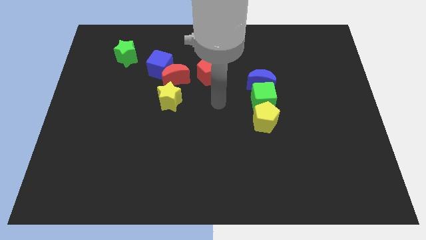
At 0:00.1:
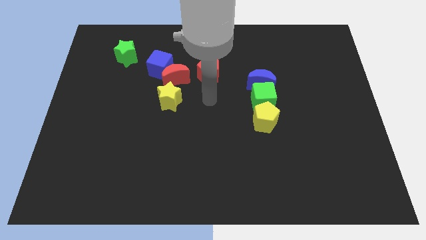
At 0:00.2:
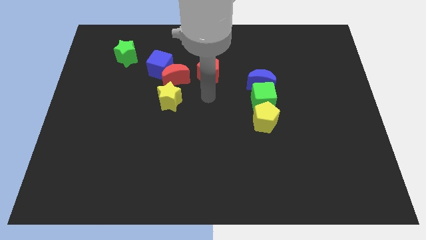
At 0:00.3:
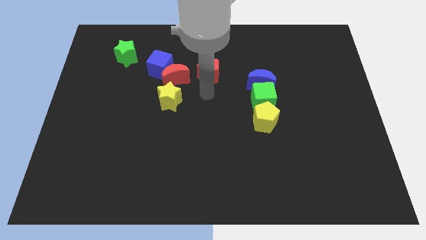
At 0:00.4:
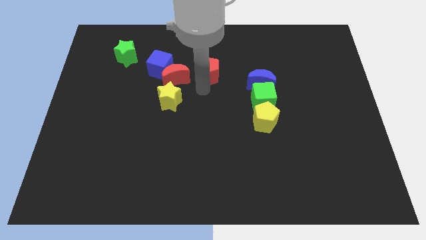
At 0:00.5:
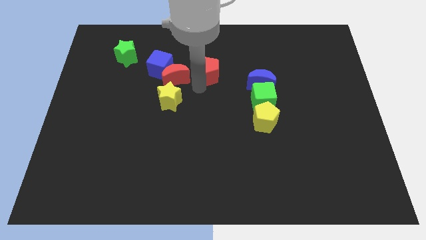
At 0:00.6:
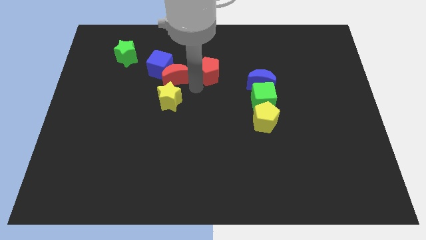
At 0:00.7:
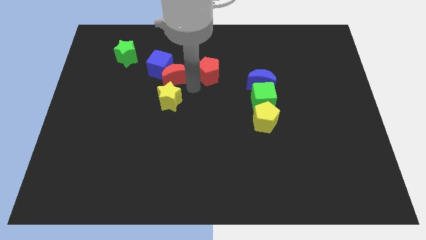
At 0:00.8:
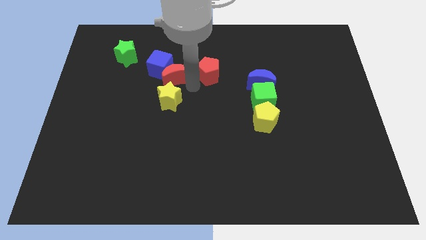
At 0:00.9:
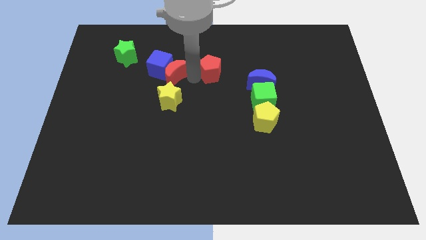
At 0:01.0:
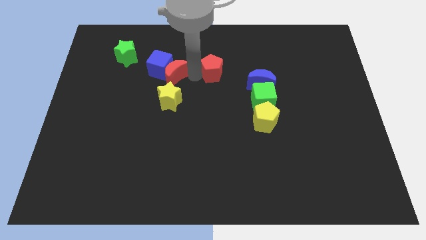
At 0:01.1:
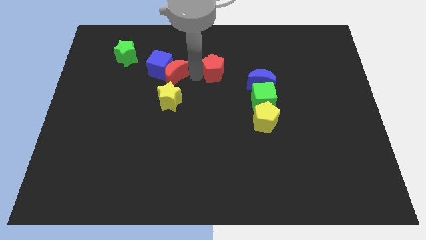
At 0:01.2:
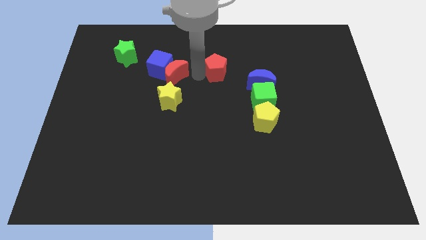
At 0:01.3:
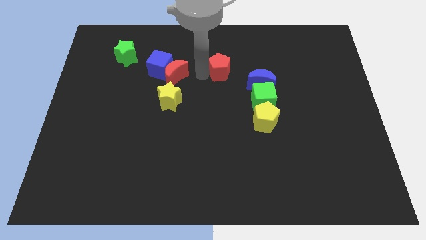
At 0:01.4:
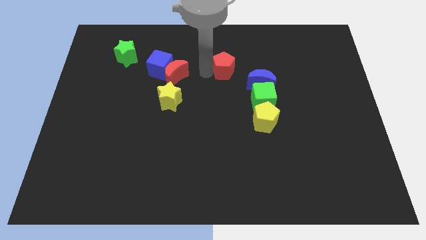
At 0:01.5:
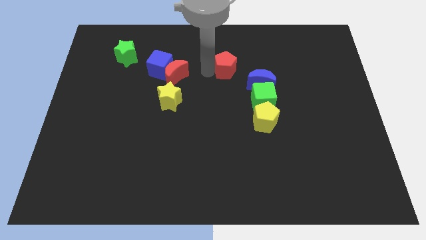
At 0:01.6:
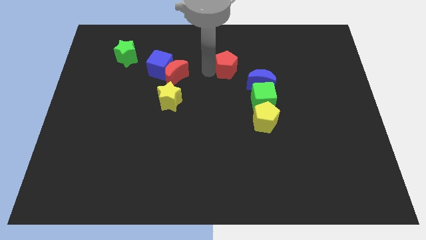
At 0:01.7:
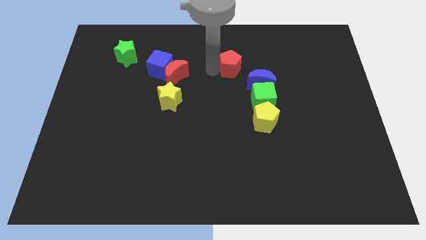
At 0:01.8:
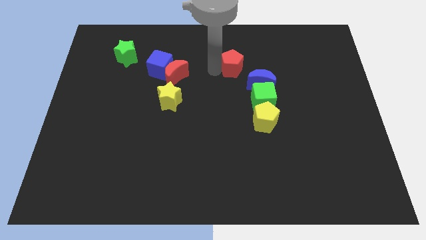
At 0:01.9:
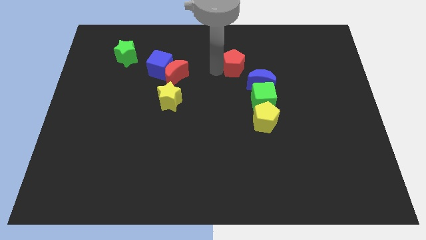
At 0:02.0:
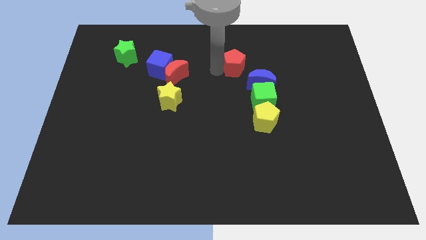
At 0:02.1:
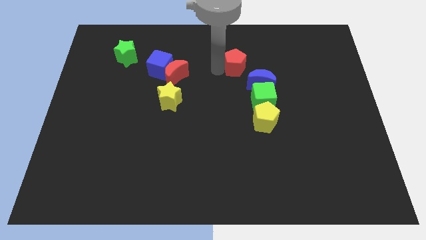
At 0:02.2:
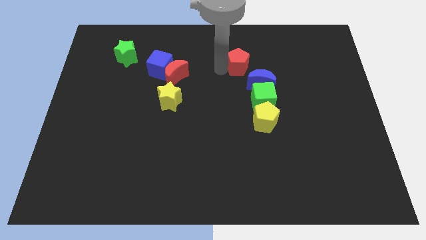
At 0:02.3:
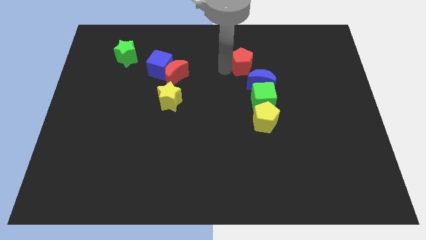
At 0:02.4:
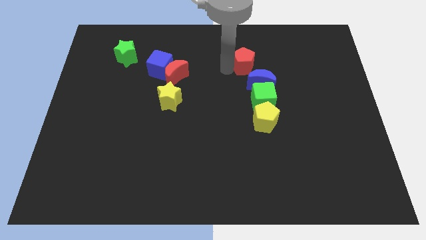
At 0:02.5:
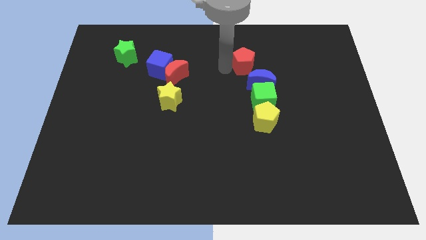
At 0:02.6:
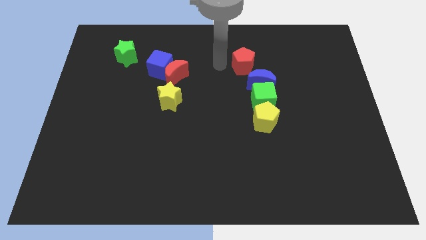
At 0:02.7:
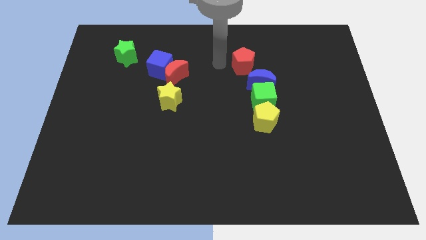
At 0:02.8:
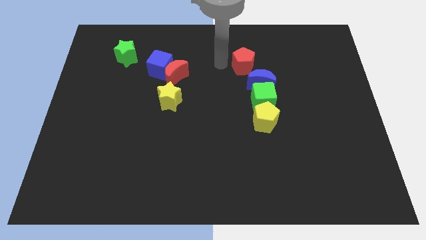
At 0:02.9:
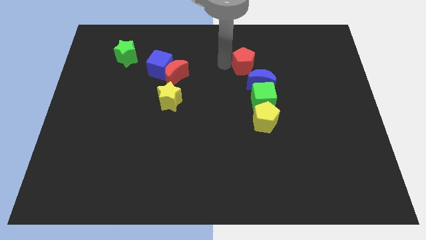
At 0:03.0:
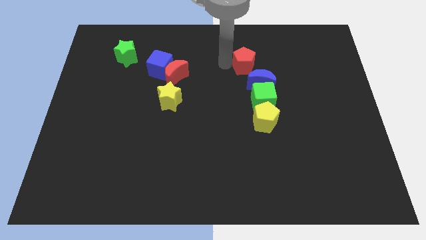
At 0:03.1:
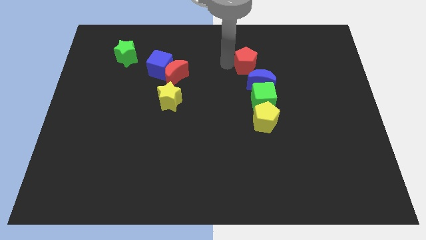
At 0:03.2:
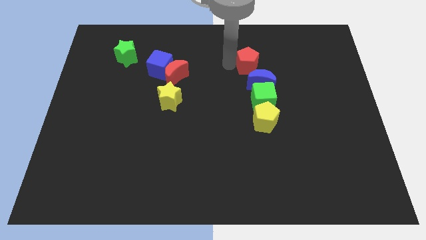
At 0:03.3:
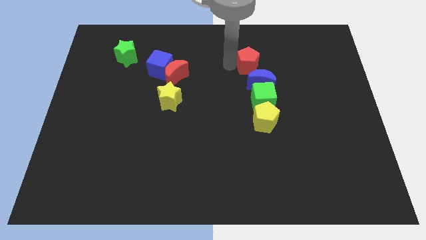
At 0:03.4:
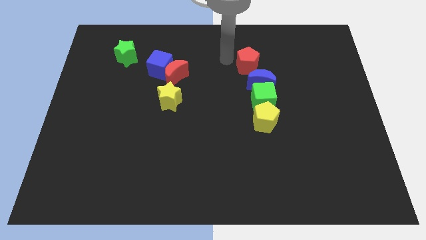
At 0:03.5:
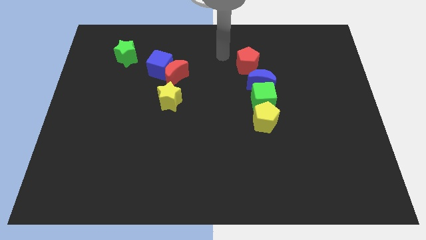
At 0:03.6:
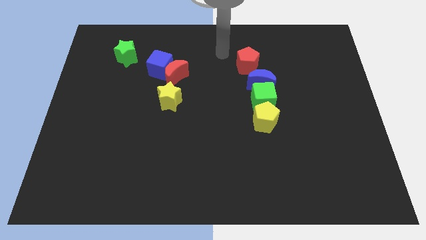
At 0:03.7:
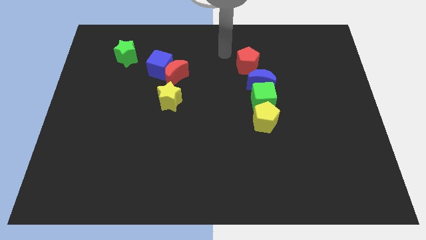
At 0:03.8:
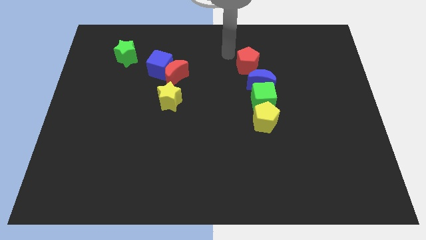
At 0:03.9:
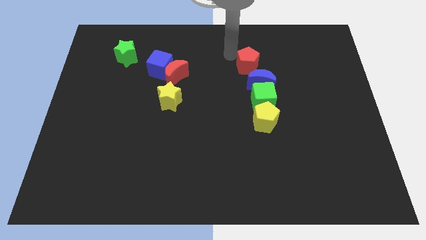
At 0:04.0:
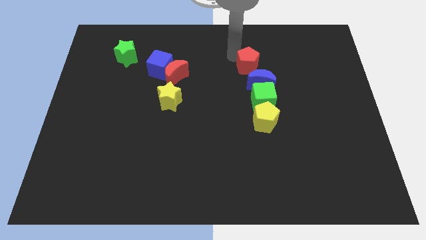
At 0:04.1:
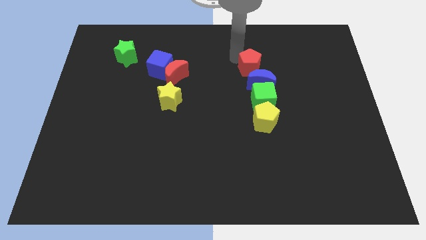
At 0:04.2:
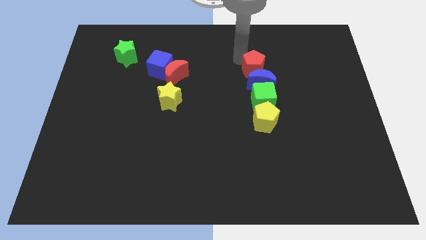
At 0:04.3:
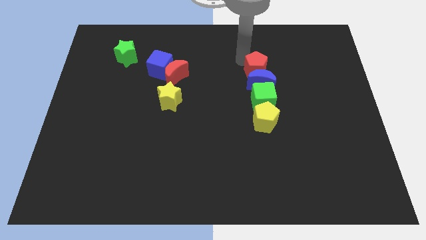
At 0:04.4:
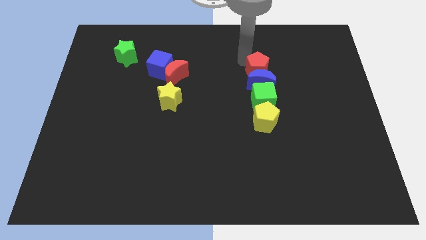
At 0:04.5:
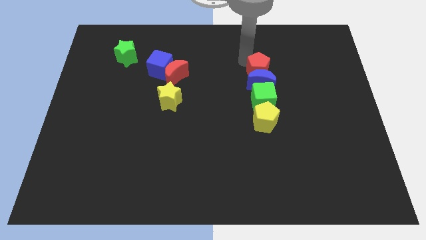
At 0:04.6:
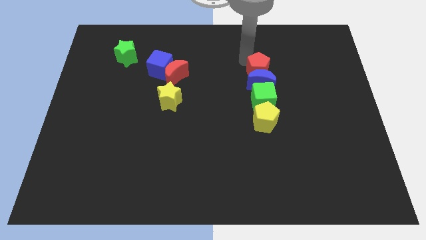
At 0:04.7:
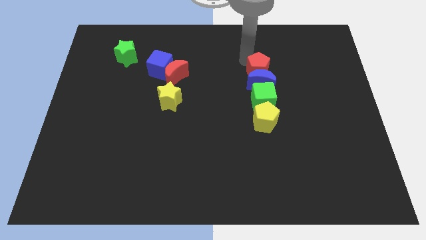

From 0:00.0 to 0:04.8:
move the red pentagon to the top side of the blue moon

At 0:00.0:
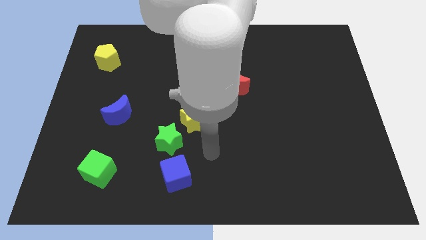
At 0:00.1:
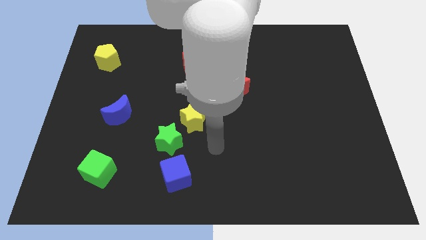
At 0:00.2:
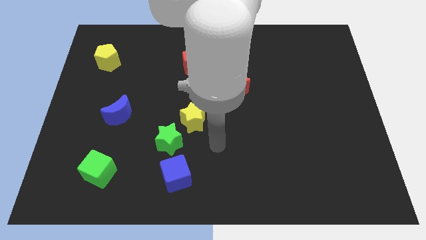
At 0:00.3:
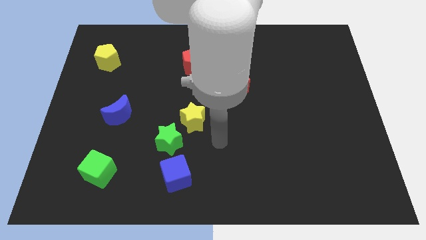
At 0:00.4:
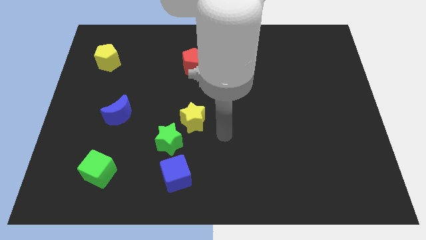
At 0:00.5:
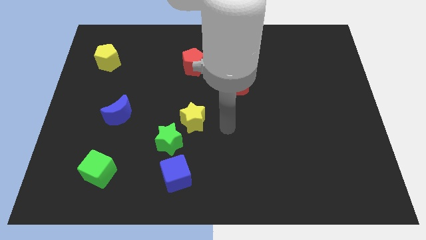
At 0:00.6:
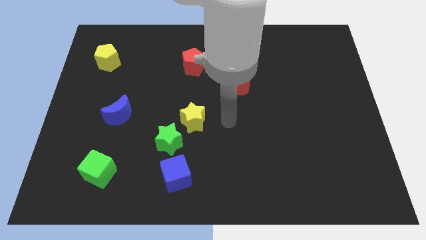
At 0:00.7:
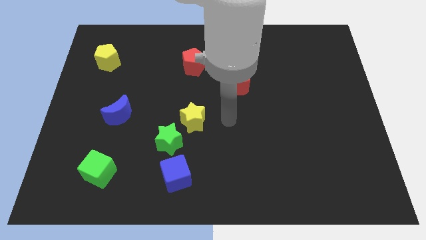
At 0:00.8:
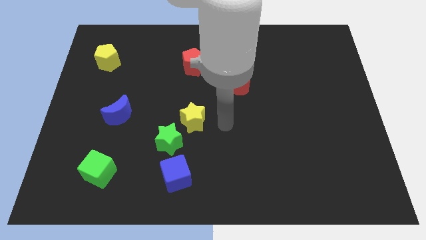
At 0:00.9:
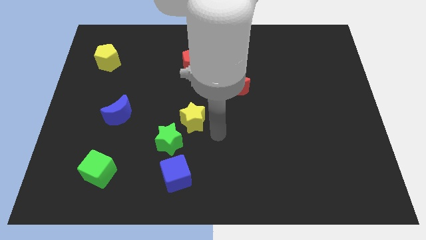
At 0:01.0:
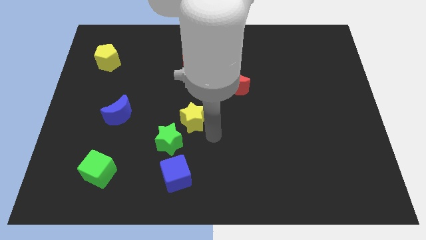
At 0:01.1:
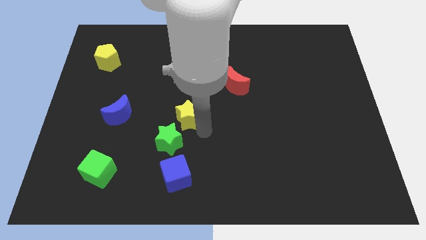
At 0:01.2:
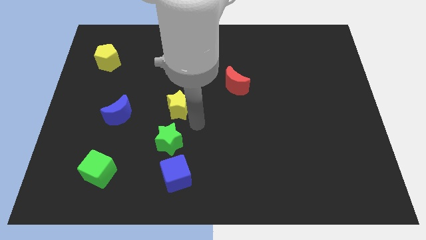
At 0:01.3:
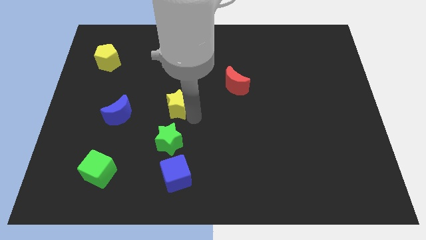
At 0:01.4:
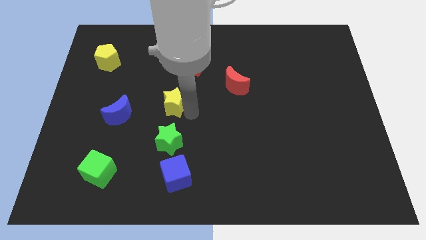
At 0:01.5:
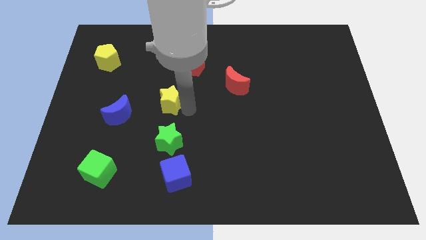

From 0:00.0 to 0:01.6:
put the yellow star vertically to the top of the green star

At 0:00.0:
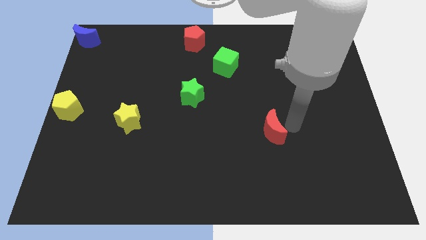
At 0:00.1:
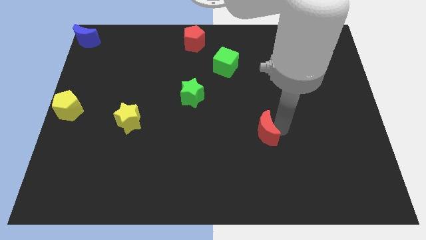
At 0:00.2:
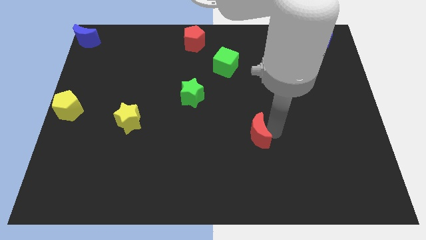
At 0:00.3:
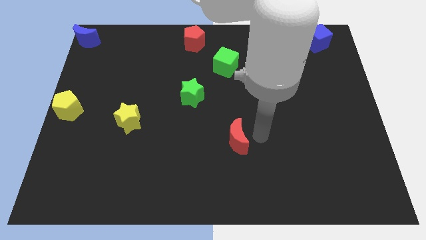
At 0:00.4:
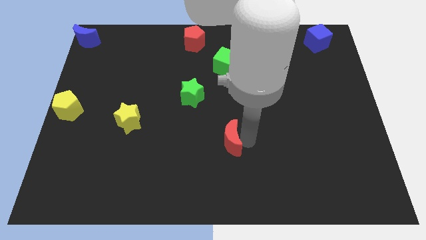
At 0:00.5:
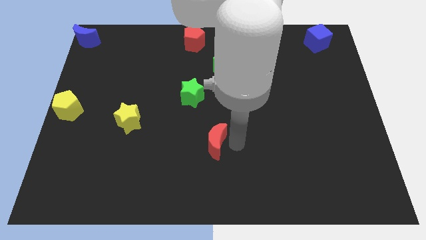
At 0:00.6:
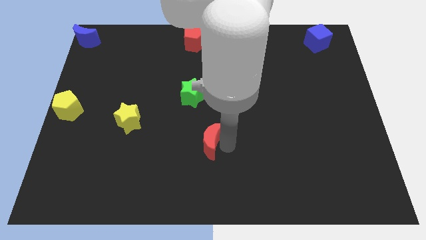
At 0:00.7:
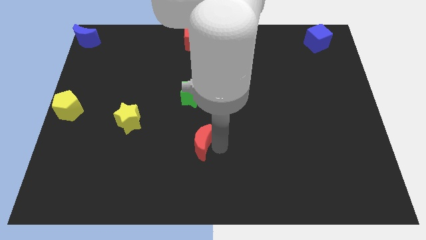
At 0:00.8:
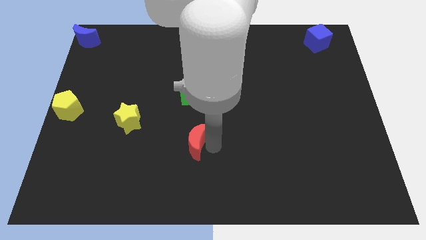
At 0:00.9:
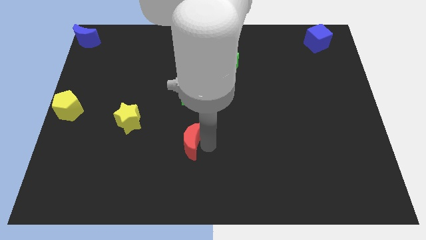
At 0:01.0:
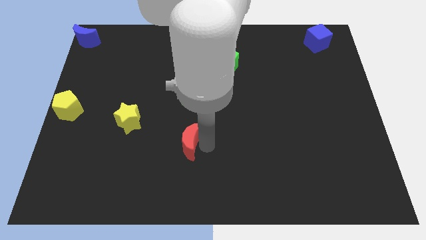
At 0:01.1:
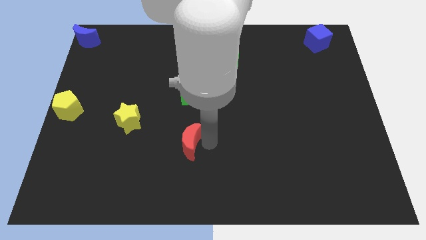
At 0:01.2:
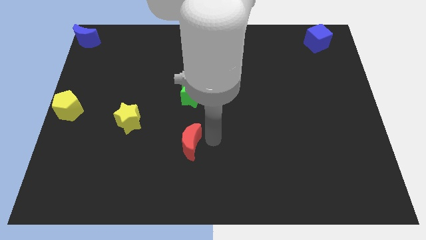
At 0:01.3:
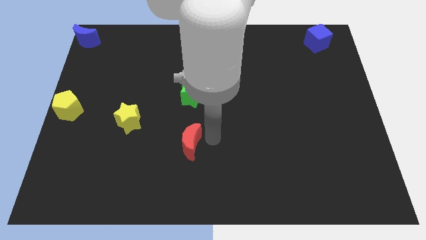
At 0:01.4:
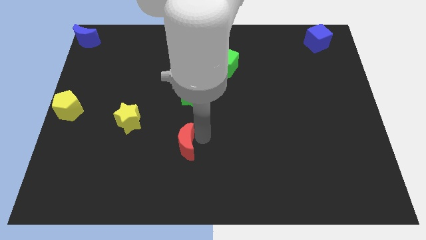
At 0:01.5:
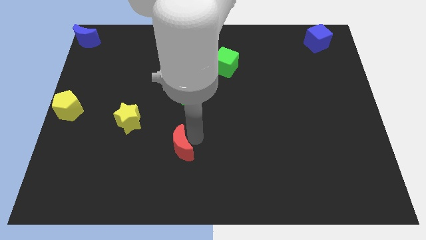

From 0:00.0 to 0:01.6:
push the red crescent towards the bottom side of the green star

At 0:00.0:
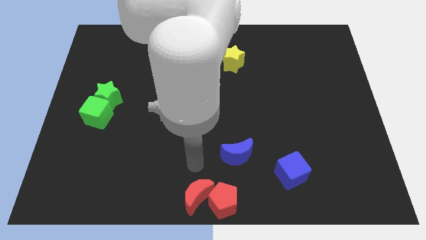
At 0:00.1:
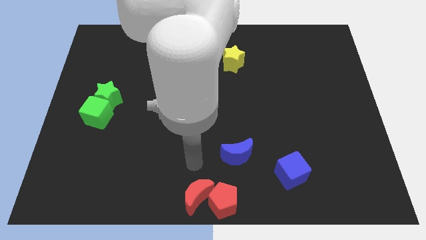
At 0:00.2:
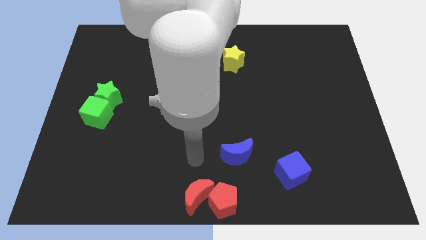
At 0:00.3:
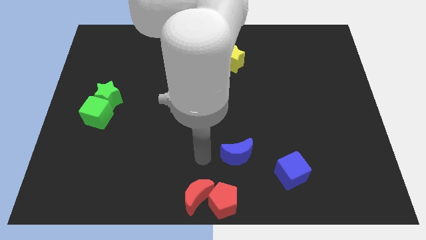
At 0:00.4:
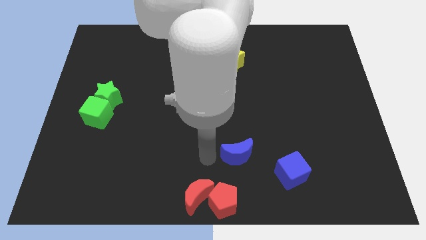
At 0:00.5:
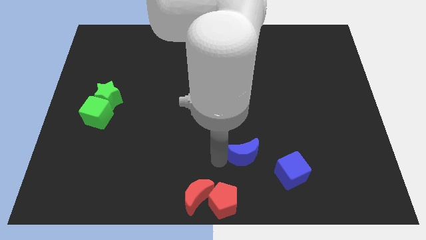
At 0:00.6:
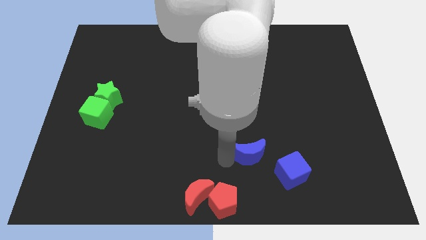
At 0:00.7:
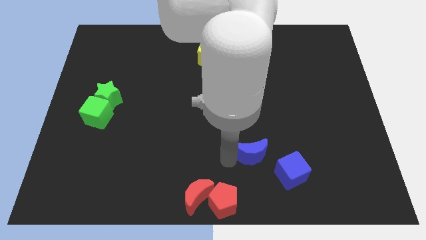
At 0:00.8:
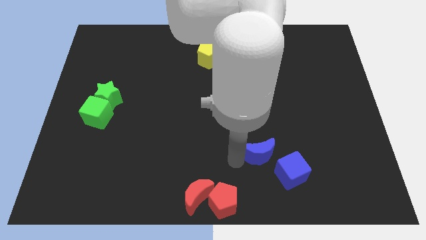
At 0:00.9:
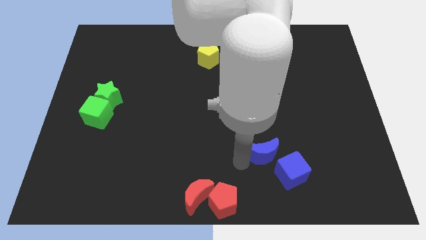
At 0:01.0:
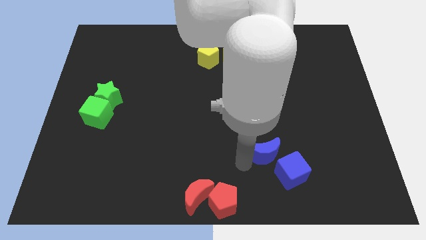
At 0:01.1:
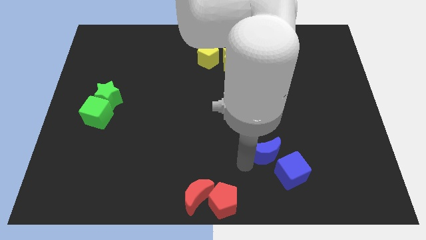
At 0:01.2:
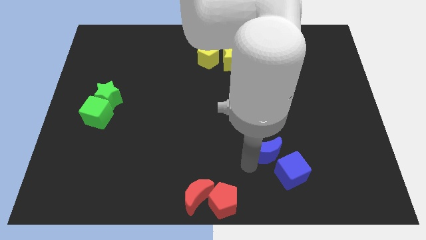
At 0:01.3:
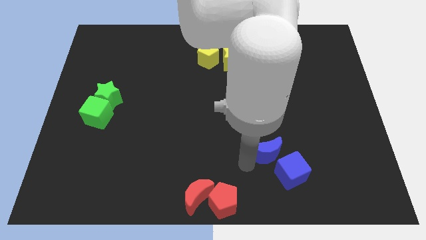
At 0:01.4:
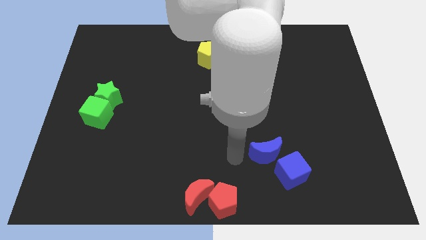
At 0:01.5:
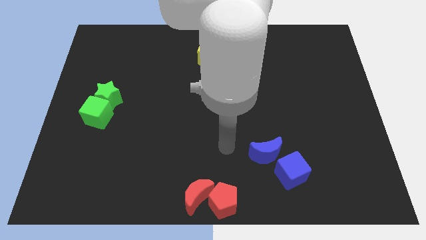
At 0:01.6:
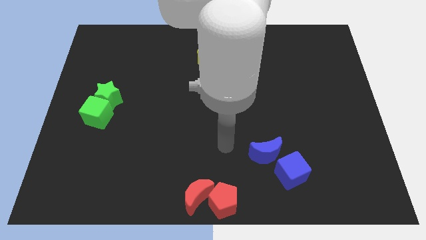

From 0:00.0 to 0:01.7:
push the blue moon to the top left of the blue cube
